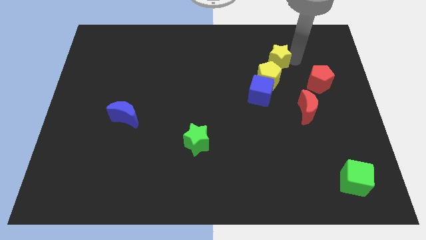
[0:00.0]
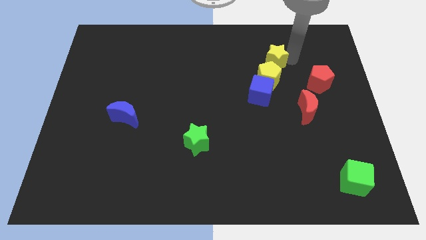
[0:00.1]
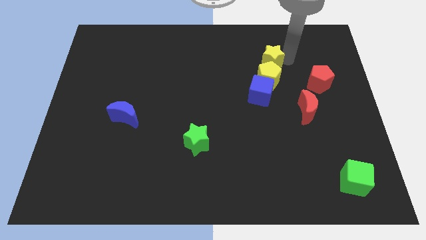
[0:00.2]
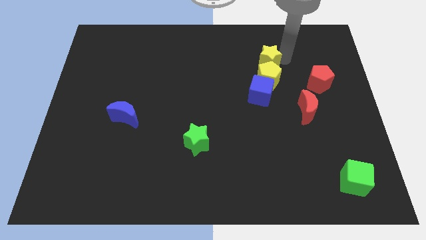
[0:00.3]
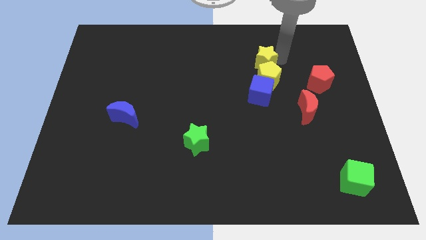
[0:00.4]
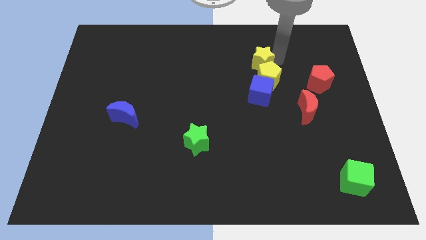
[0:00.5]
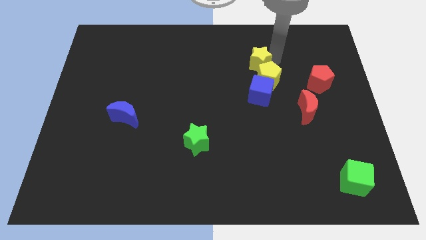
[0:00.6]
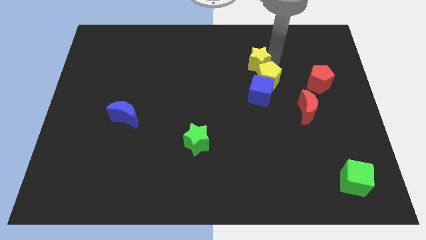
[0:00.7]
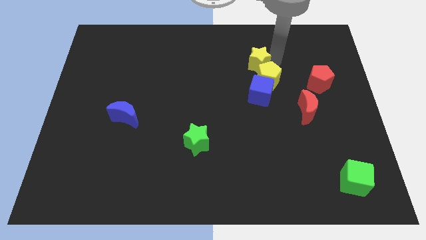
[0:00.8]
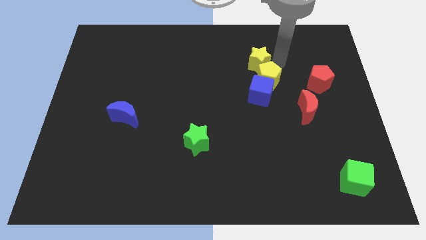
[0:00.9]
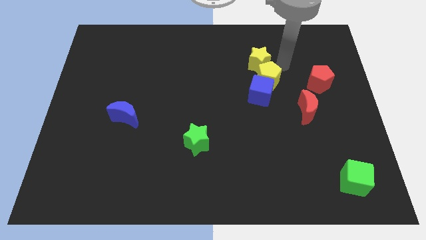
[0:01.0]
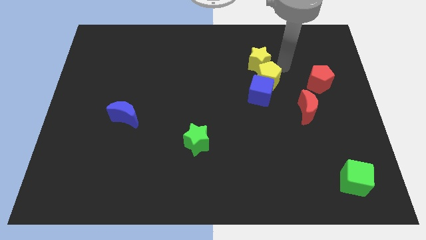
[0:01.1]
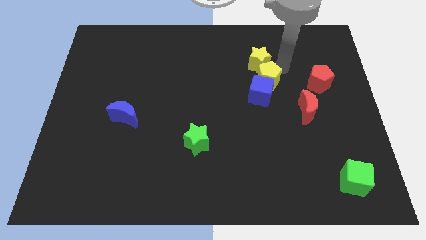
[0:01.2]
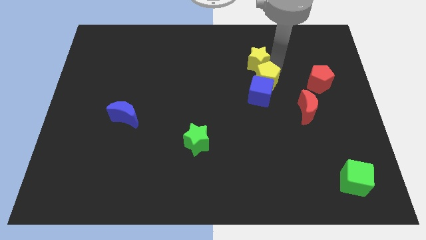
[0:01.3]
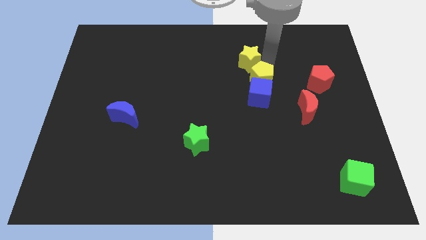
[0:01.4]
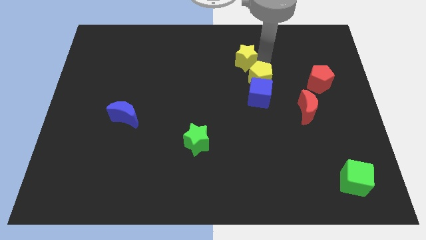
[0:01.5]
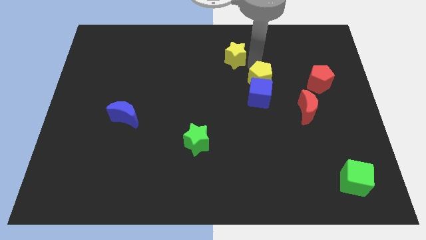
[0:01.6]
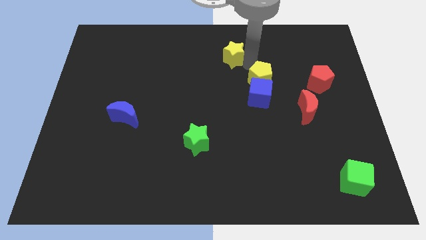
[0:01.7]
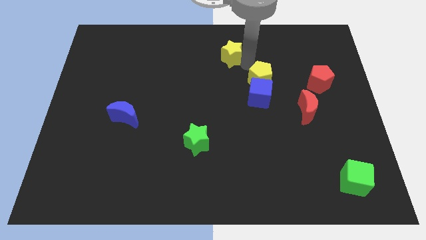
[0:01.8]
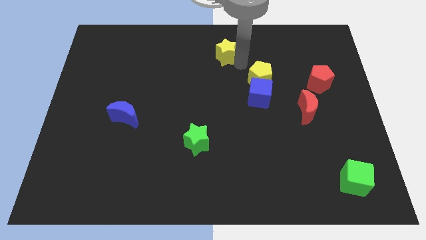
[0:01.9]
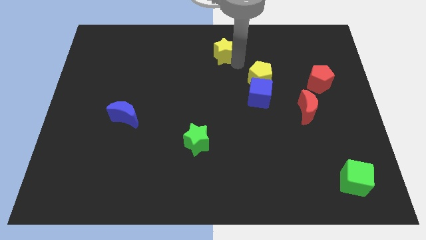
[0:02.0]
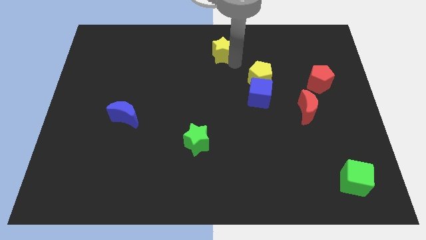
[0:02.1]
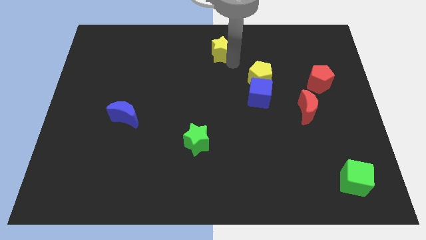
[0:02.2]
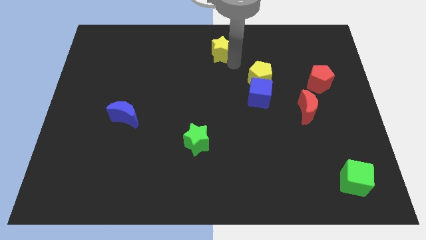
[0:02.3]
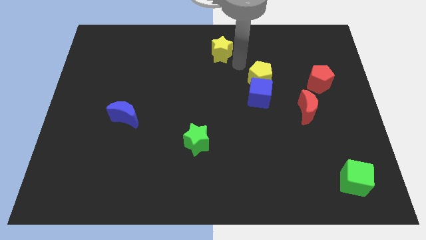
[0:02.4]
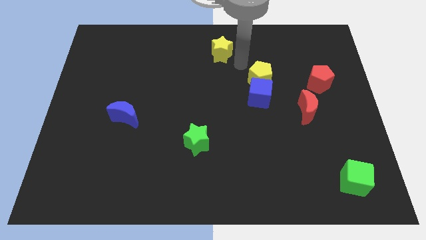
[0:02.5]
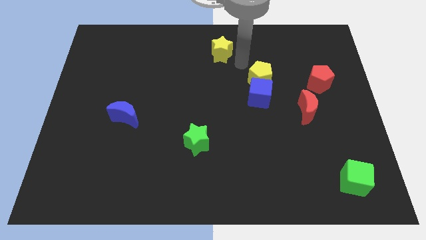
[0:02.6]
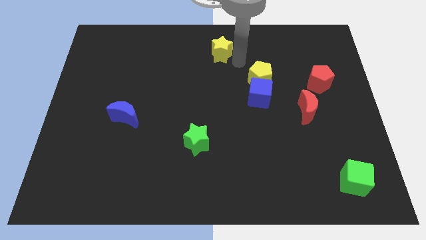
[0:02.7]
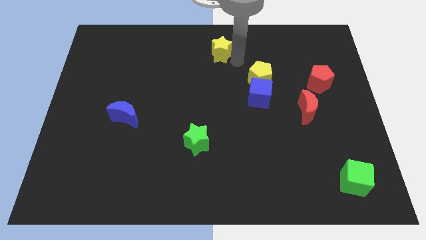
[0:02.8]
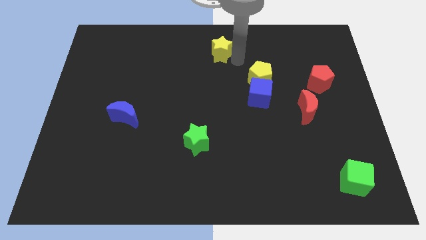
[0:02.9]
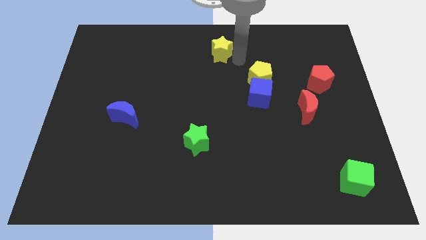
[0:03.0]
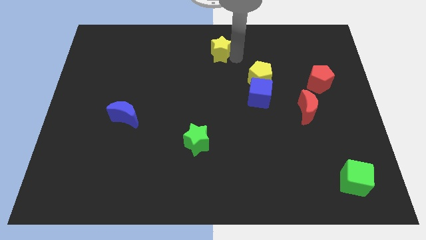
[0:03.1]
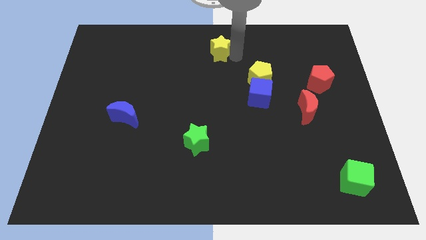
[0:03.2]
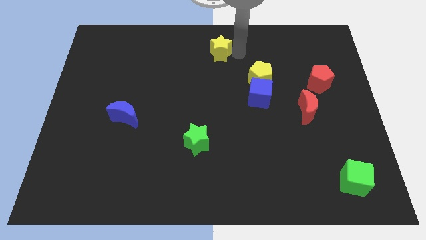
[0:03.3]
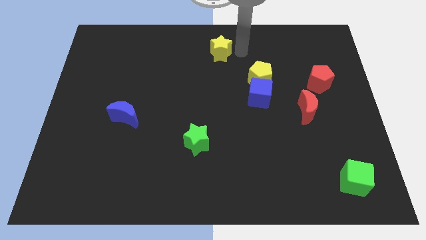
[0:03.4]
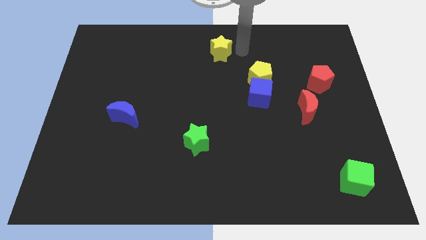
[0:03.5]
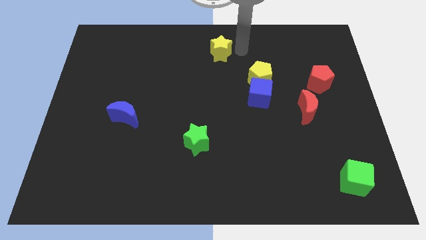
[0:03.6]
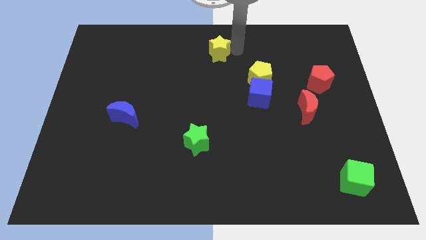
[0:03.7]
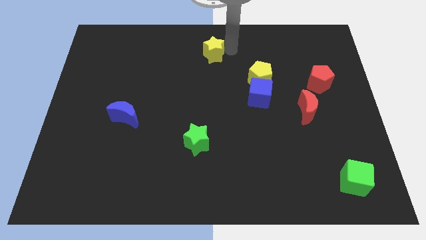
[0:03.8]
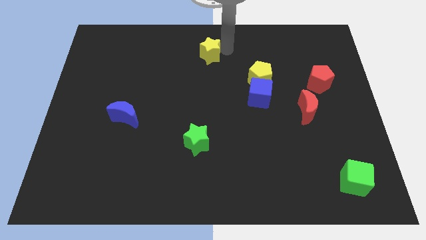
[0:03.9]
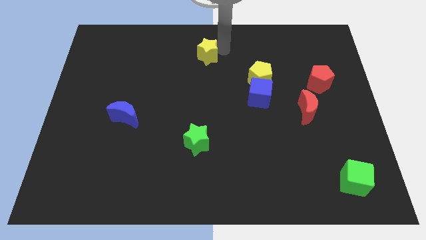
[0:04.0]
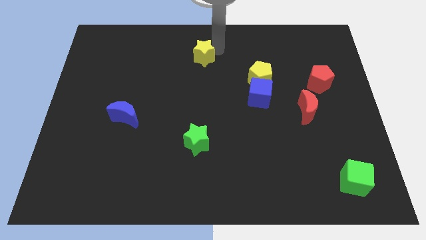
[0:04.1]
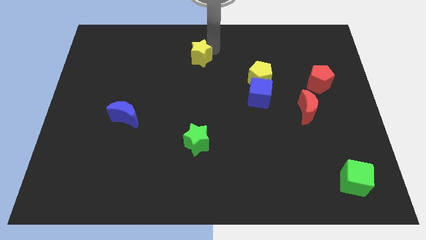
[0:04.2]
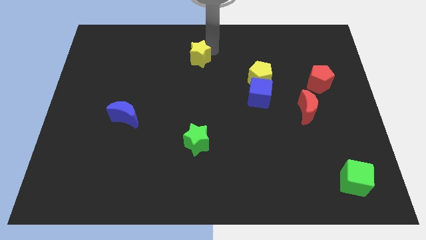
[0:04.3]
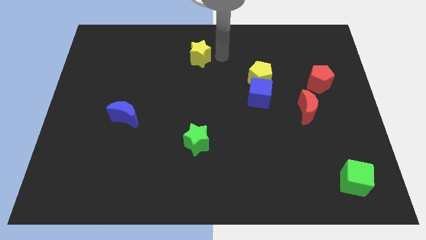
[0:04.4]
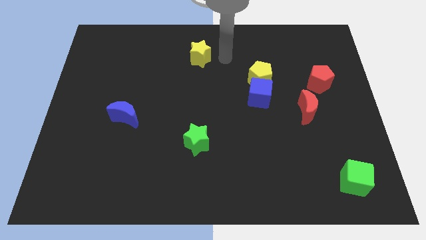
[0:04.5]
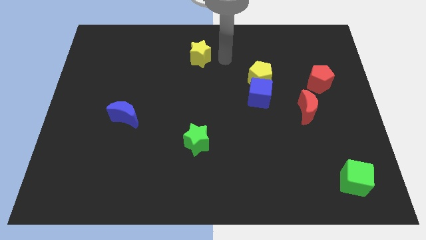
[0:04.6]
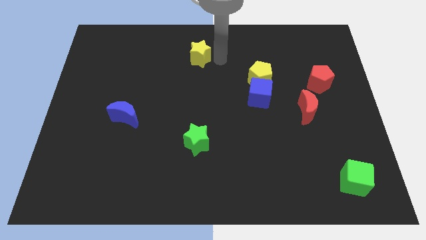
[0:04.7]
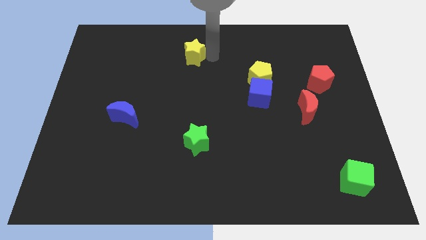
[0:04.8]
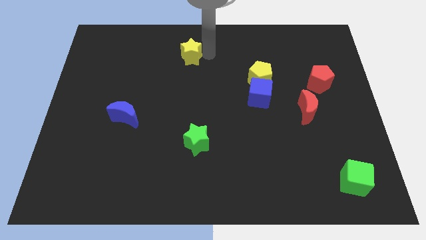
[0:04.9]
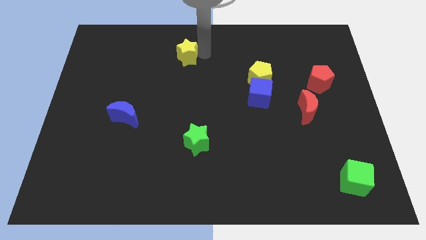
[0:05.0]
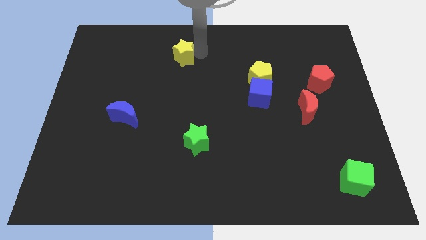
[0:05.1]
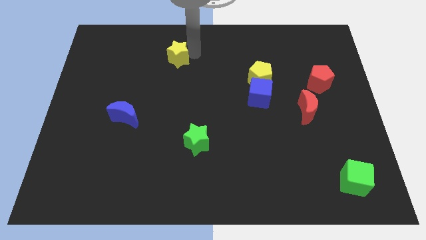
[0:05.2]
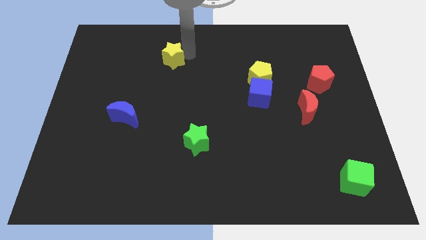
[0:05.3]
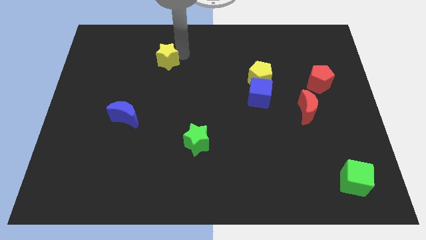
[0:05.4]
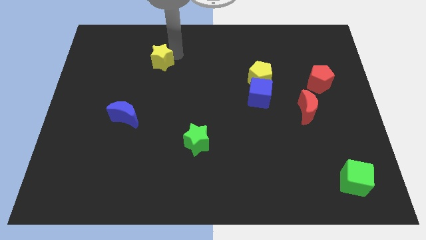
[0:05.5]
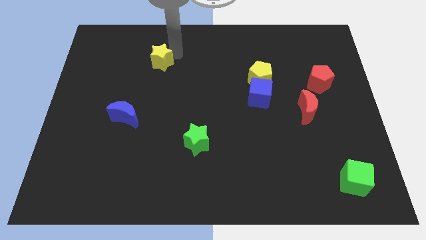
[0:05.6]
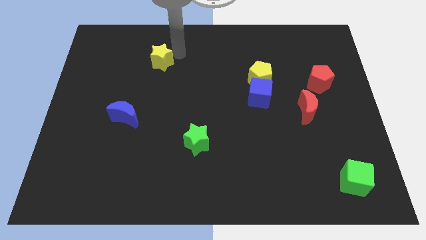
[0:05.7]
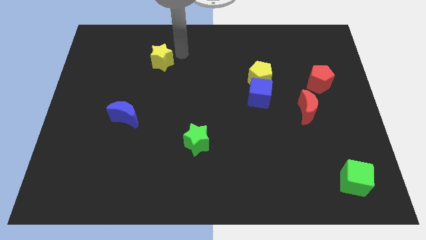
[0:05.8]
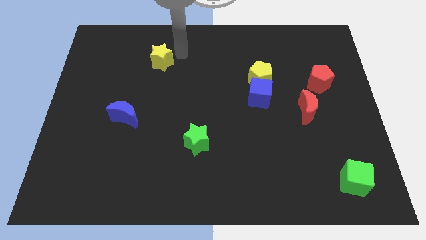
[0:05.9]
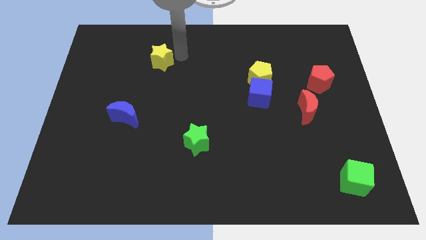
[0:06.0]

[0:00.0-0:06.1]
push the yellow star to the left of the board

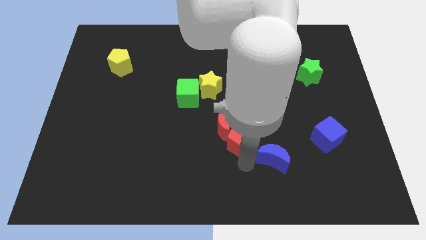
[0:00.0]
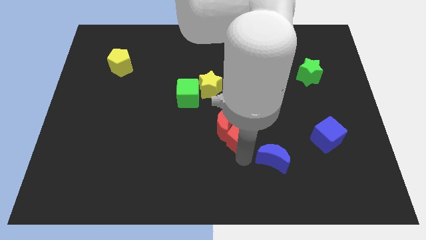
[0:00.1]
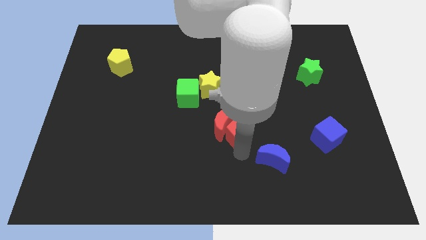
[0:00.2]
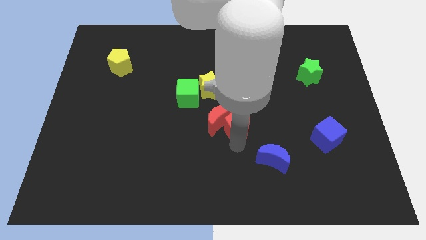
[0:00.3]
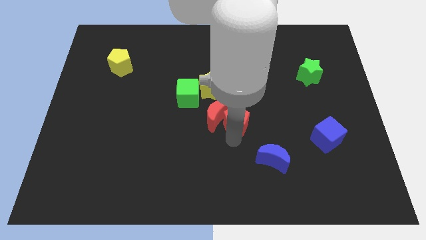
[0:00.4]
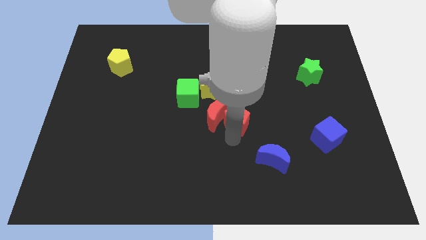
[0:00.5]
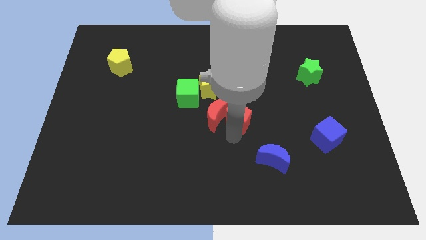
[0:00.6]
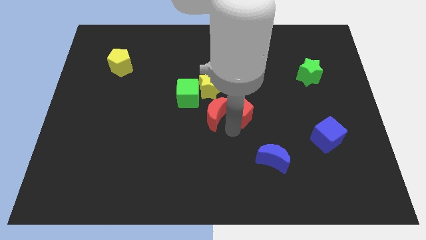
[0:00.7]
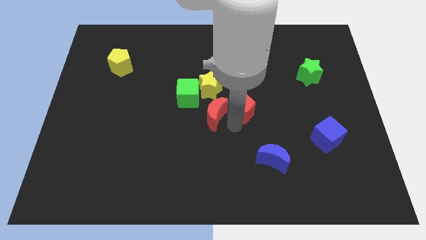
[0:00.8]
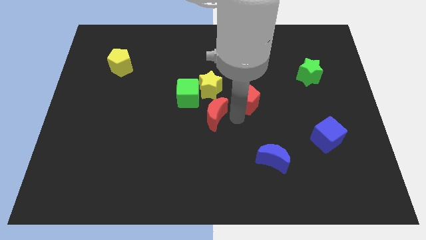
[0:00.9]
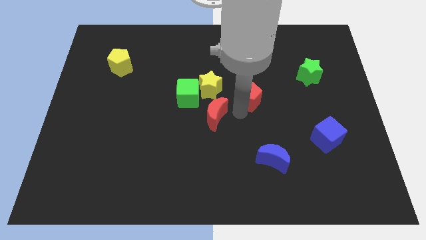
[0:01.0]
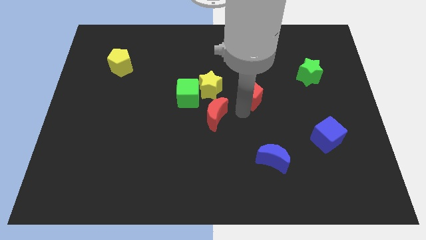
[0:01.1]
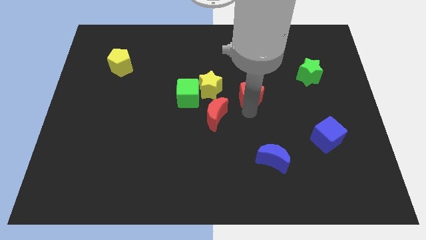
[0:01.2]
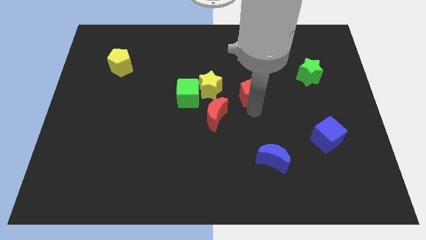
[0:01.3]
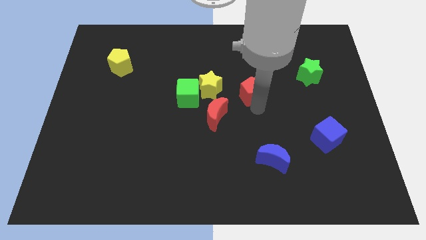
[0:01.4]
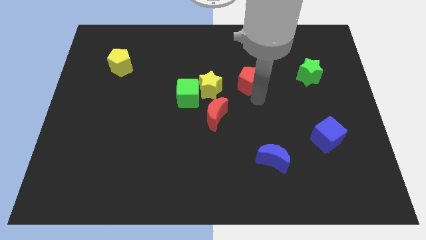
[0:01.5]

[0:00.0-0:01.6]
move the red pentagon between green and yellow stars

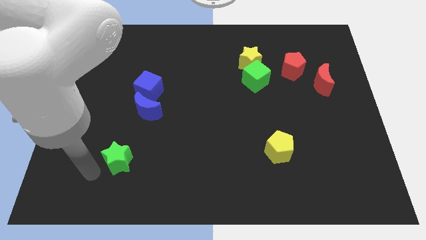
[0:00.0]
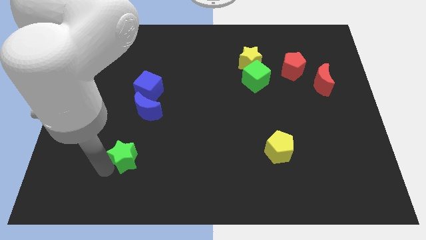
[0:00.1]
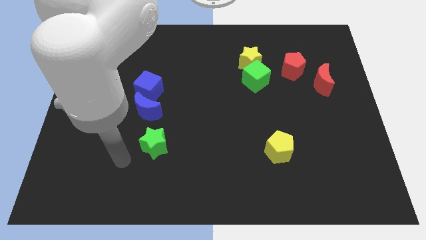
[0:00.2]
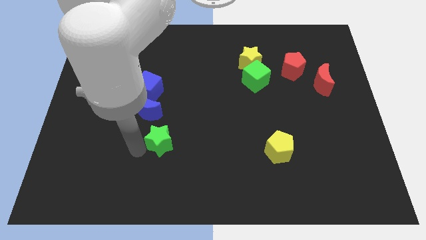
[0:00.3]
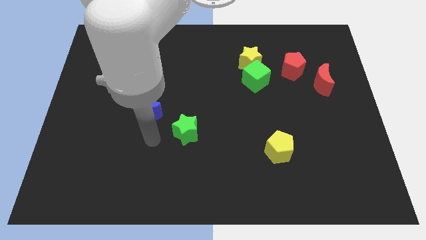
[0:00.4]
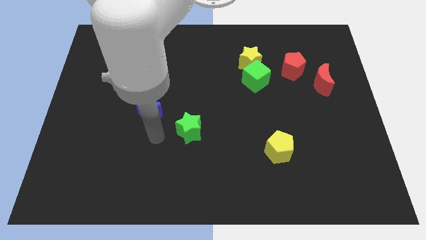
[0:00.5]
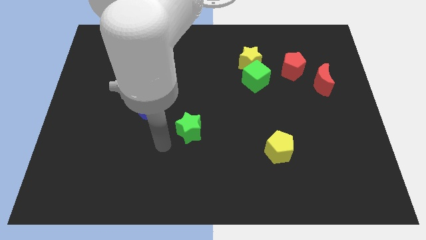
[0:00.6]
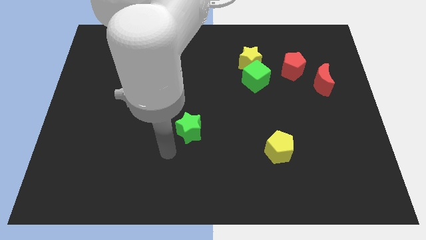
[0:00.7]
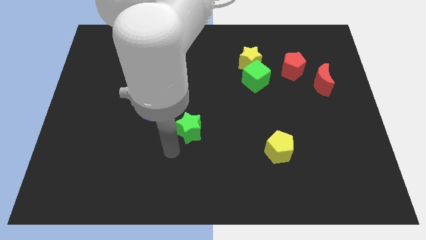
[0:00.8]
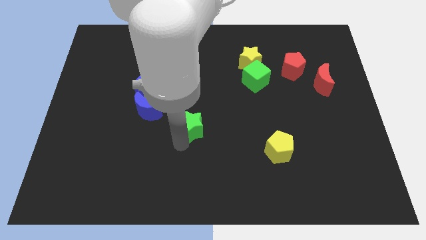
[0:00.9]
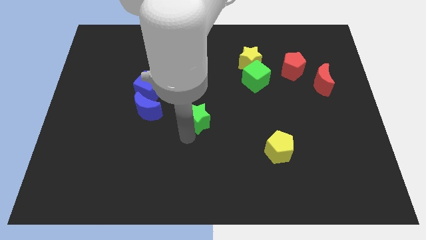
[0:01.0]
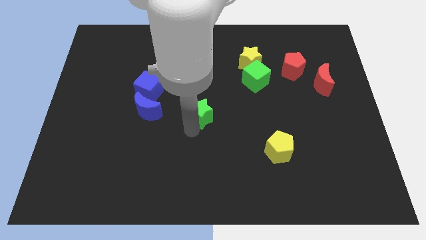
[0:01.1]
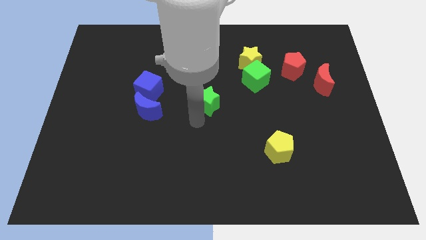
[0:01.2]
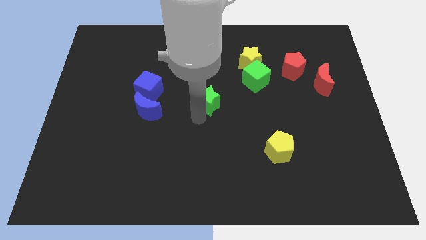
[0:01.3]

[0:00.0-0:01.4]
move the green star towards the center of the board
